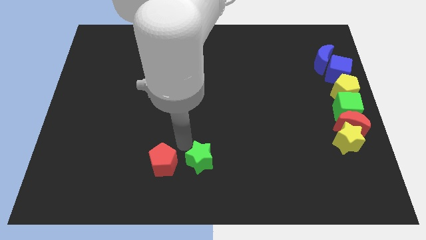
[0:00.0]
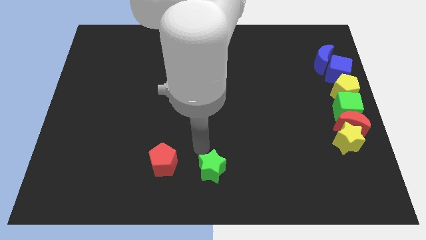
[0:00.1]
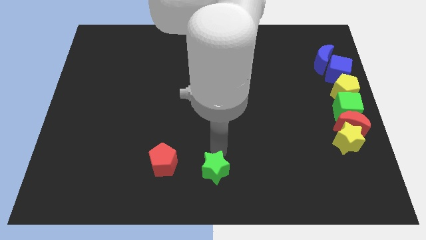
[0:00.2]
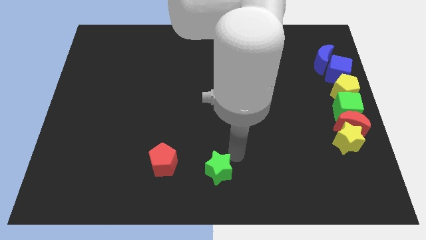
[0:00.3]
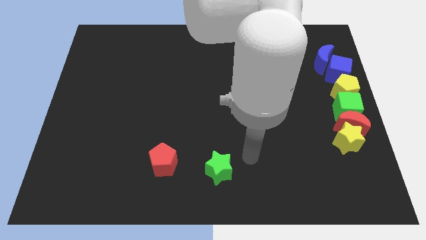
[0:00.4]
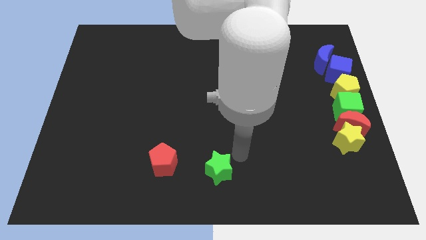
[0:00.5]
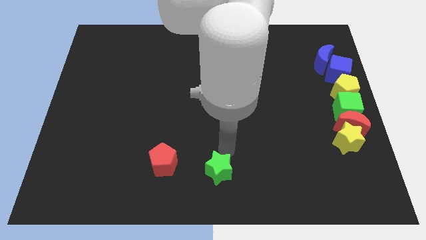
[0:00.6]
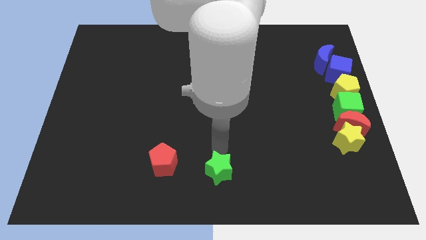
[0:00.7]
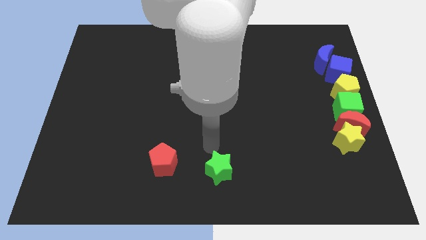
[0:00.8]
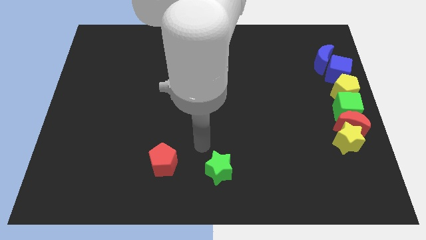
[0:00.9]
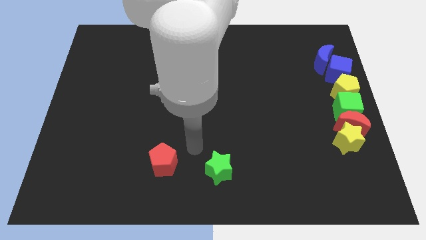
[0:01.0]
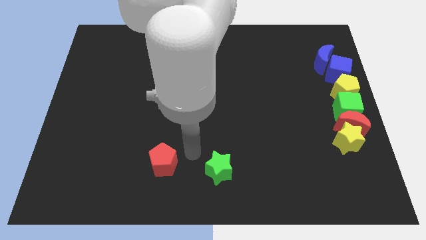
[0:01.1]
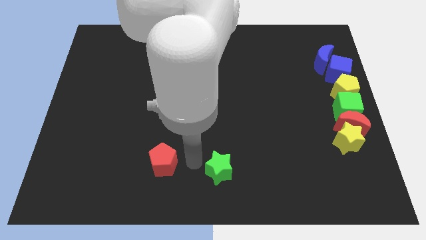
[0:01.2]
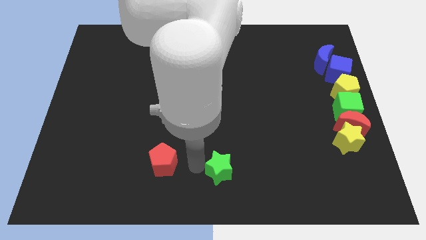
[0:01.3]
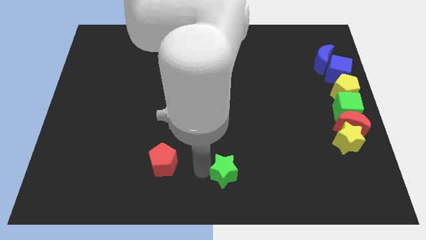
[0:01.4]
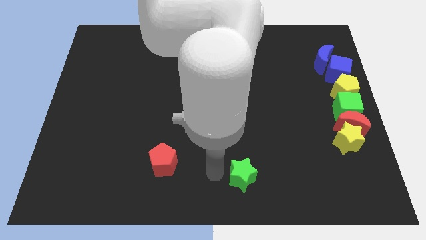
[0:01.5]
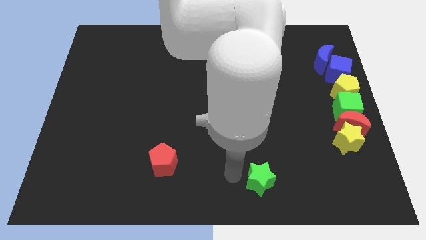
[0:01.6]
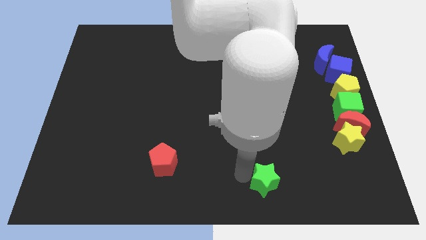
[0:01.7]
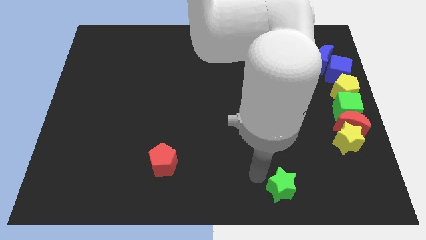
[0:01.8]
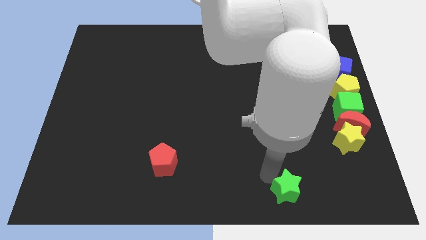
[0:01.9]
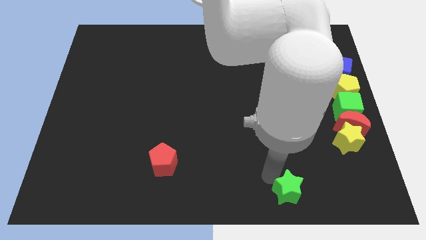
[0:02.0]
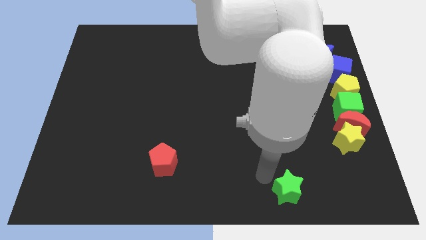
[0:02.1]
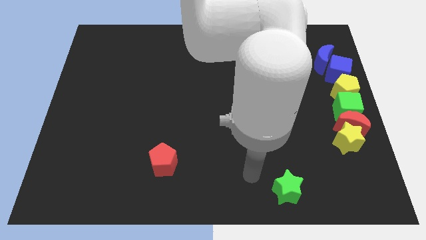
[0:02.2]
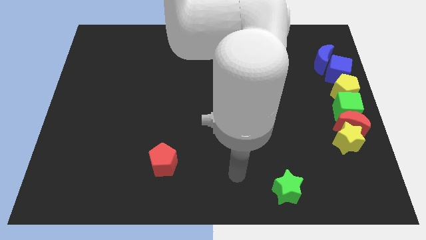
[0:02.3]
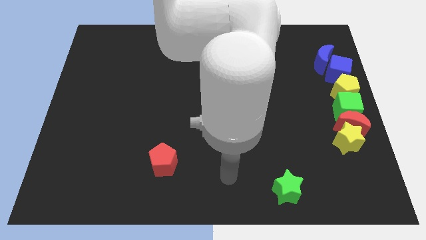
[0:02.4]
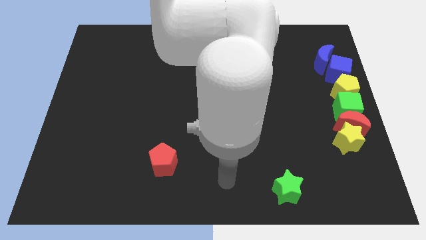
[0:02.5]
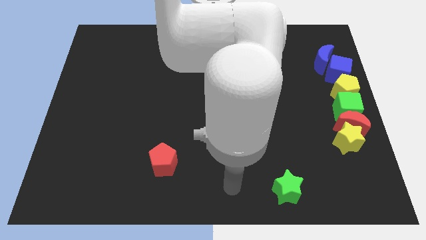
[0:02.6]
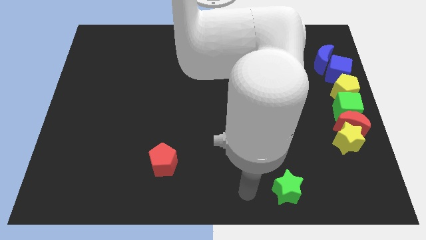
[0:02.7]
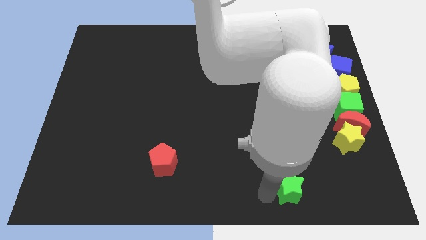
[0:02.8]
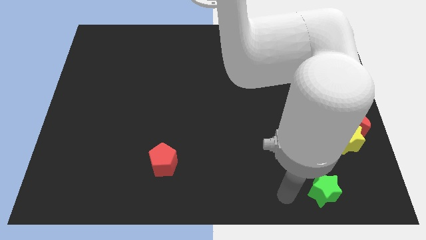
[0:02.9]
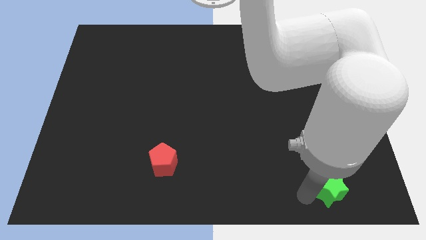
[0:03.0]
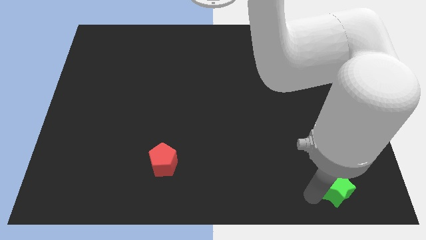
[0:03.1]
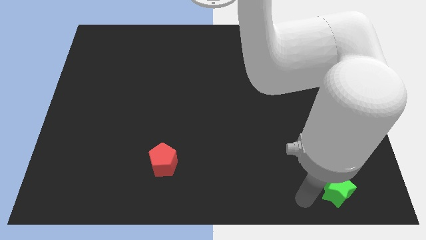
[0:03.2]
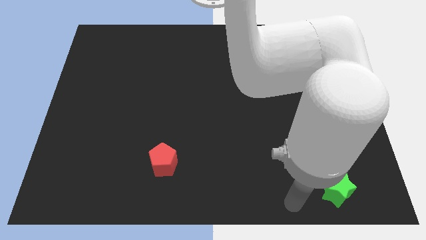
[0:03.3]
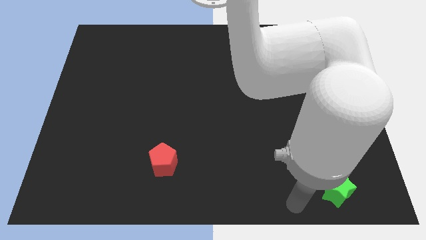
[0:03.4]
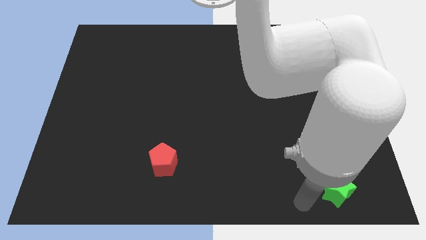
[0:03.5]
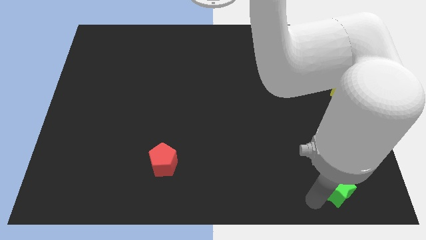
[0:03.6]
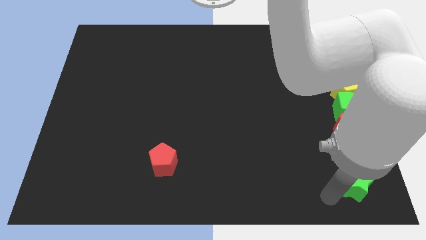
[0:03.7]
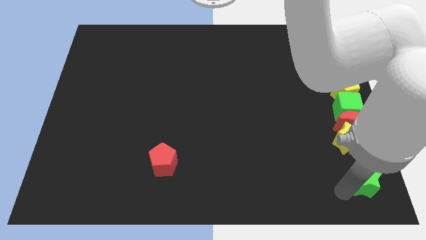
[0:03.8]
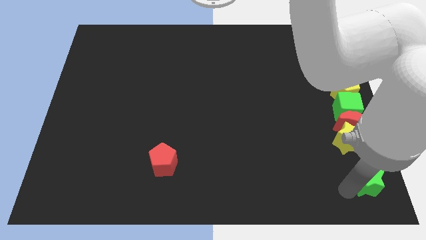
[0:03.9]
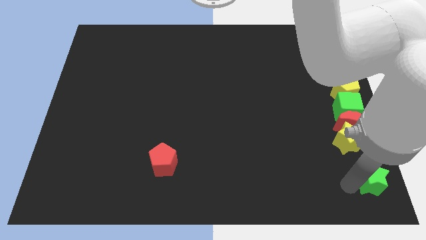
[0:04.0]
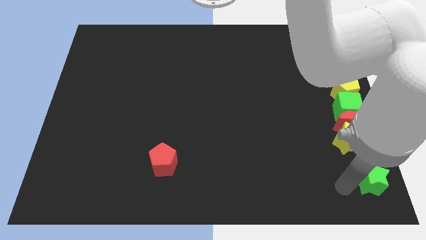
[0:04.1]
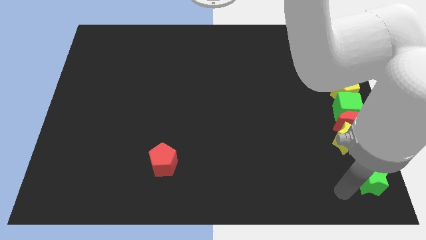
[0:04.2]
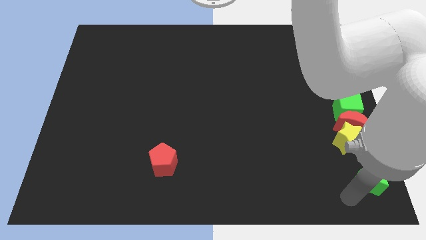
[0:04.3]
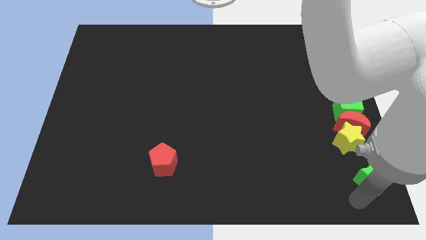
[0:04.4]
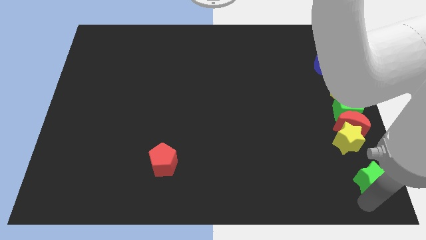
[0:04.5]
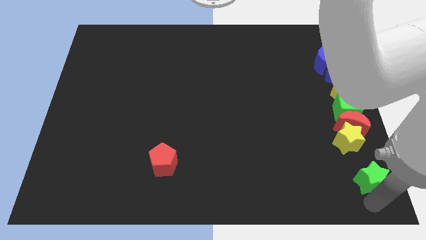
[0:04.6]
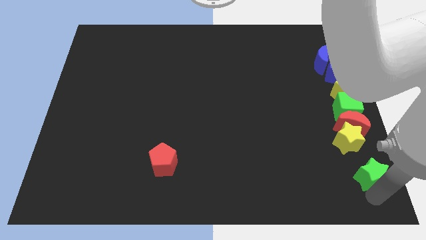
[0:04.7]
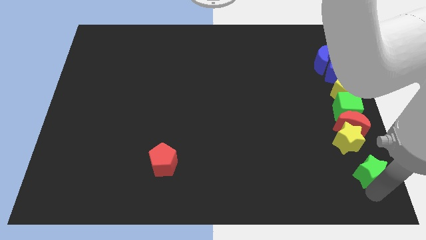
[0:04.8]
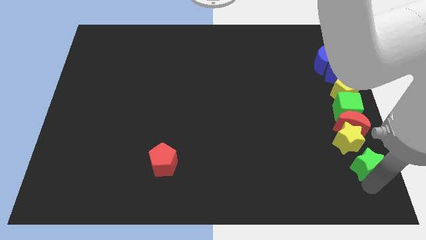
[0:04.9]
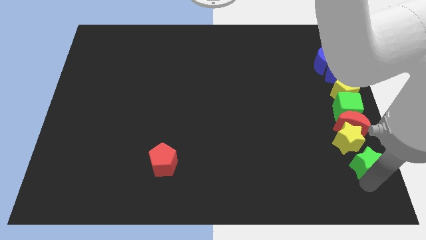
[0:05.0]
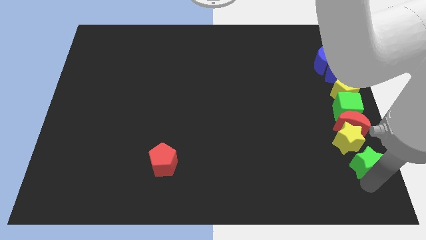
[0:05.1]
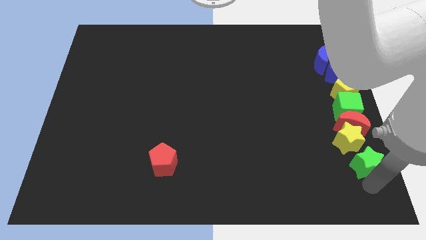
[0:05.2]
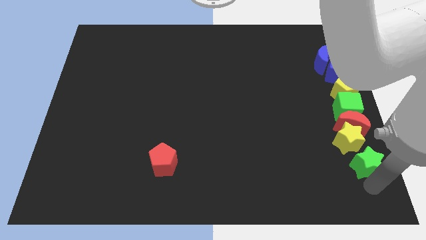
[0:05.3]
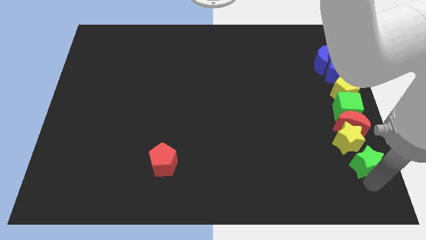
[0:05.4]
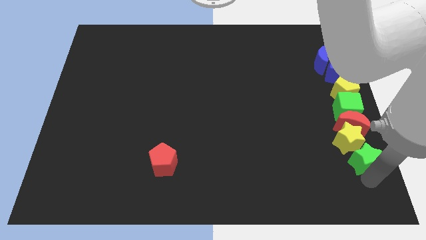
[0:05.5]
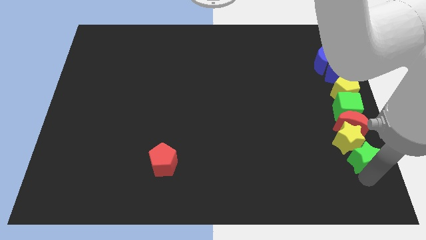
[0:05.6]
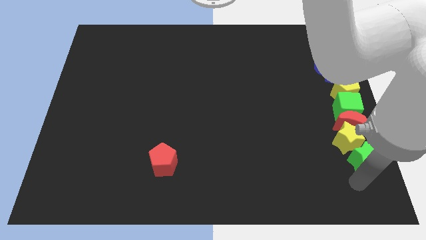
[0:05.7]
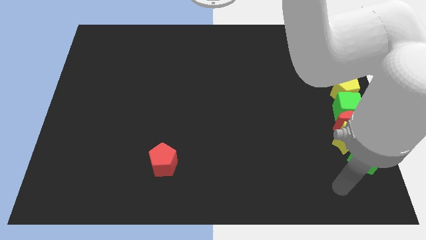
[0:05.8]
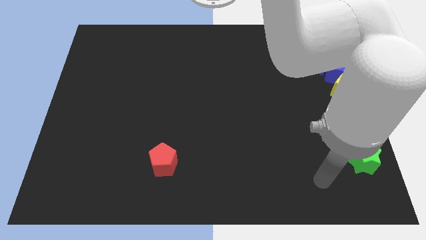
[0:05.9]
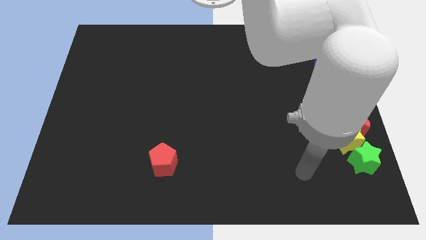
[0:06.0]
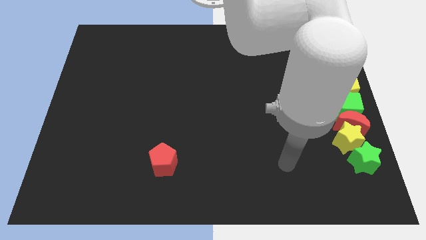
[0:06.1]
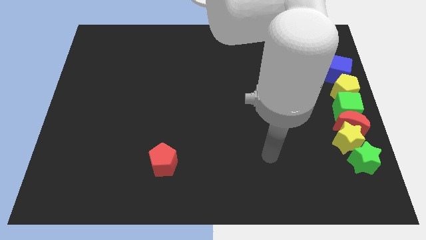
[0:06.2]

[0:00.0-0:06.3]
place the green star near the yellow star

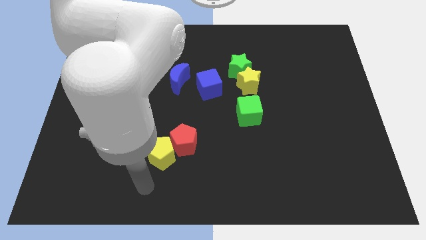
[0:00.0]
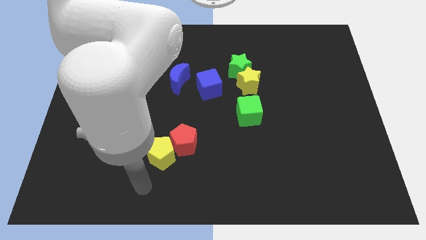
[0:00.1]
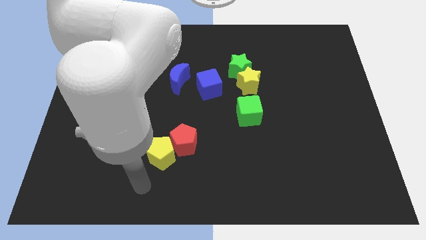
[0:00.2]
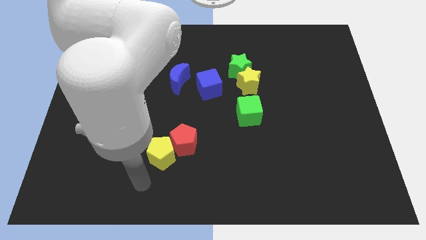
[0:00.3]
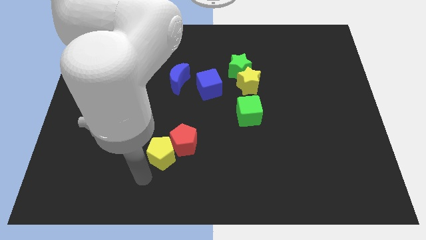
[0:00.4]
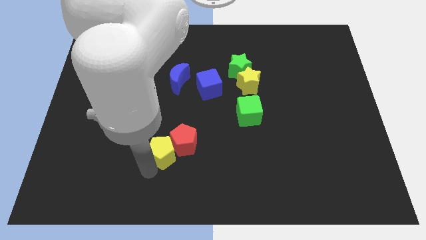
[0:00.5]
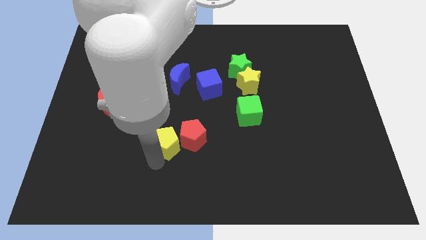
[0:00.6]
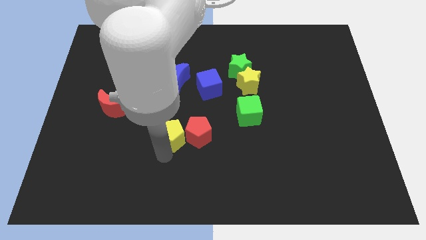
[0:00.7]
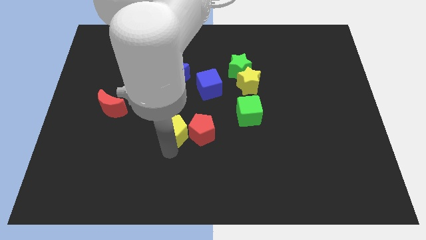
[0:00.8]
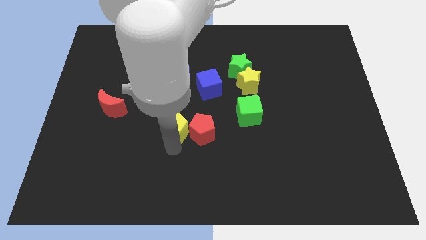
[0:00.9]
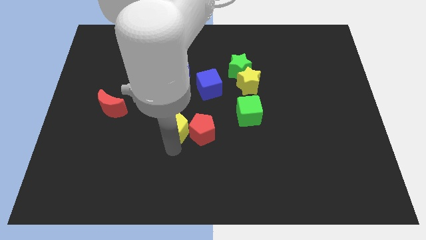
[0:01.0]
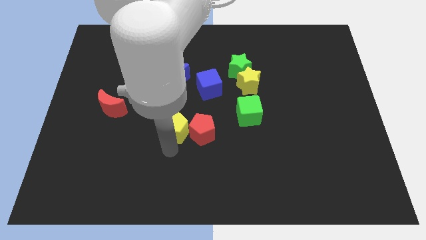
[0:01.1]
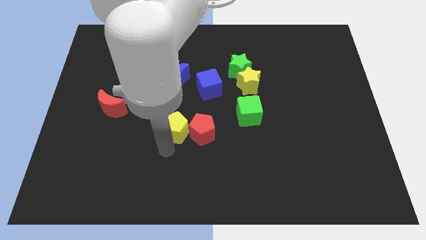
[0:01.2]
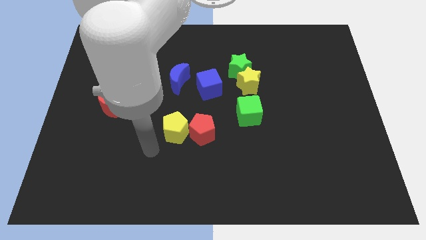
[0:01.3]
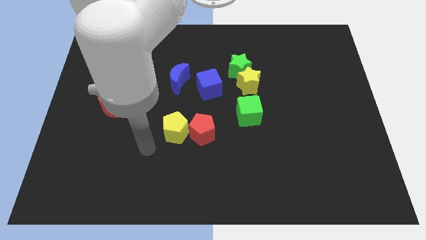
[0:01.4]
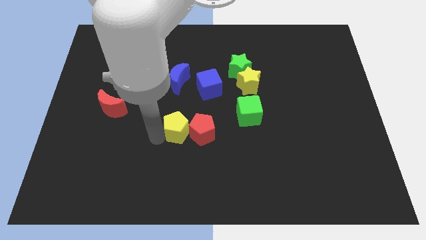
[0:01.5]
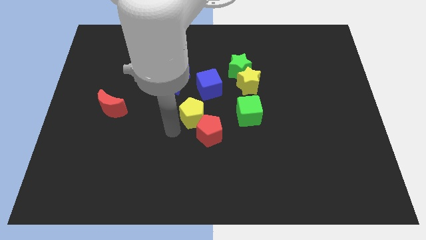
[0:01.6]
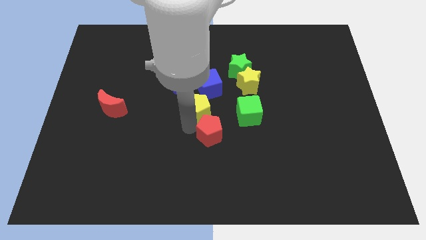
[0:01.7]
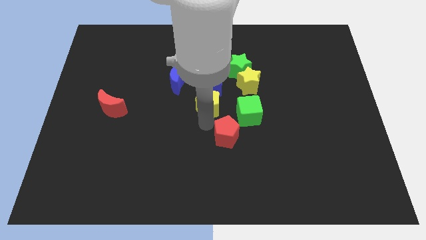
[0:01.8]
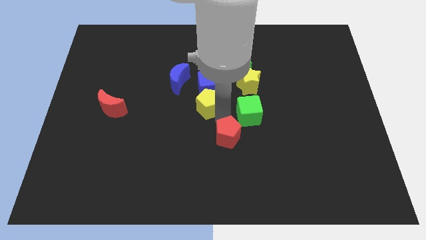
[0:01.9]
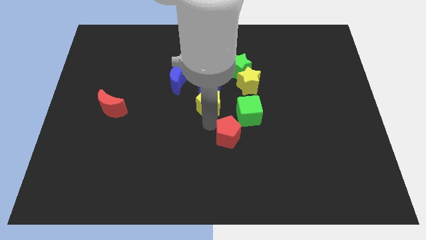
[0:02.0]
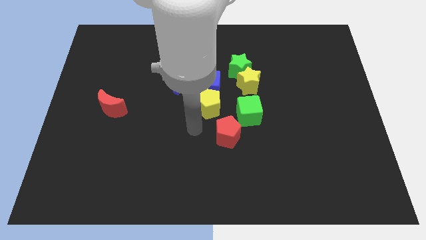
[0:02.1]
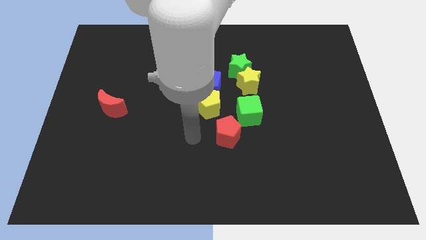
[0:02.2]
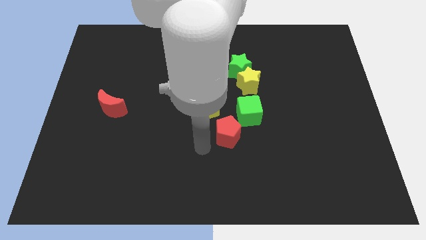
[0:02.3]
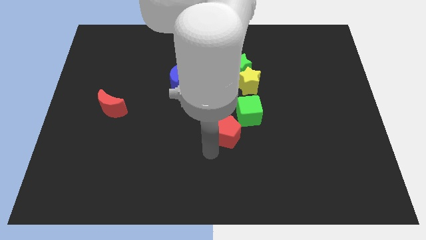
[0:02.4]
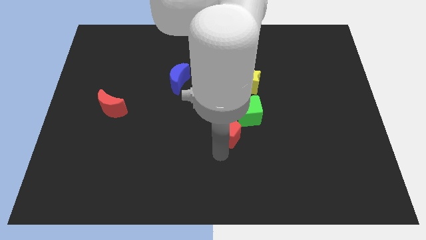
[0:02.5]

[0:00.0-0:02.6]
move the yellow pentagon below the blue cube
